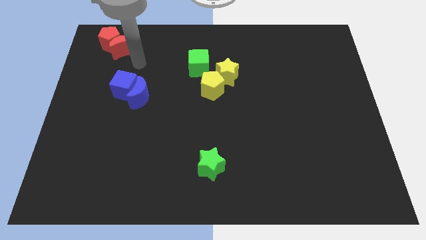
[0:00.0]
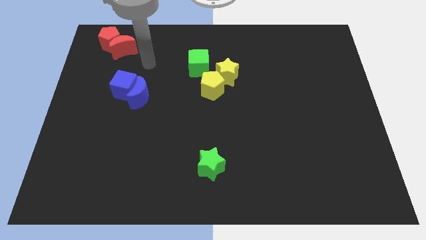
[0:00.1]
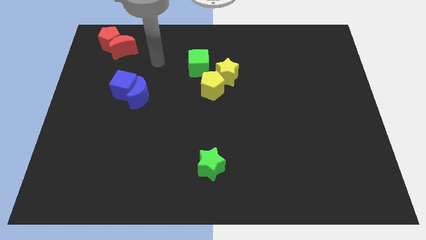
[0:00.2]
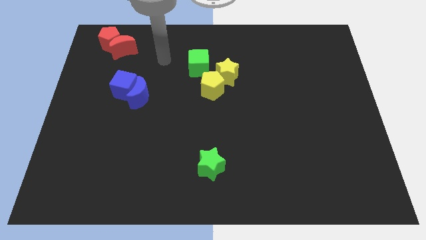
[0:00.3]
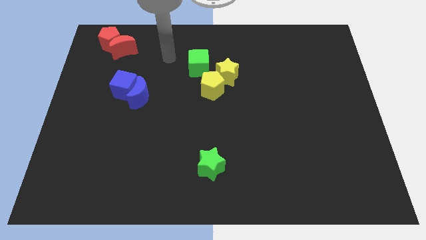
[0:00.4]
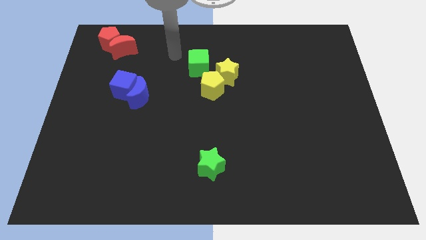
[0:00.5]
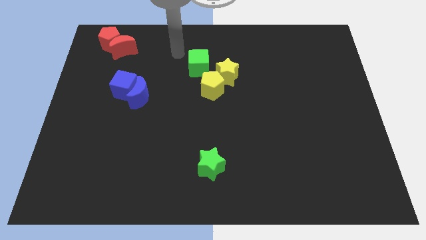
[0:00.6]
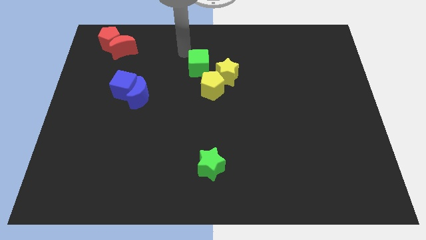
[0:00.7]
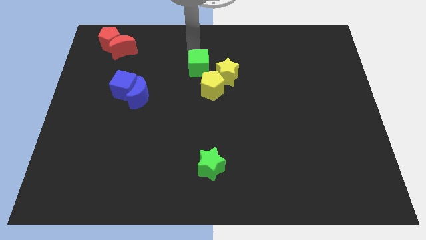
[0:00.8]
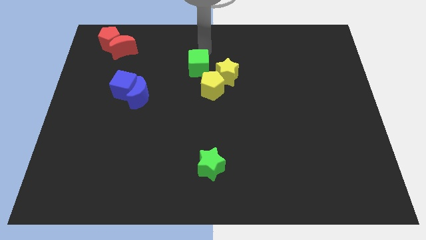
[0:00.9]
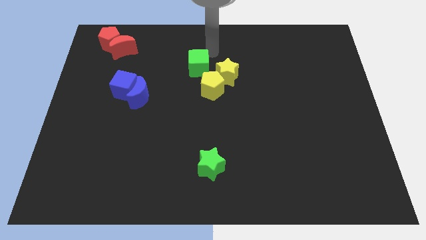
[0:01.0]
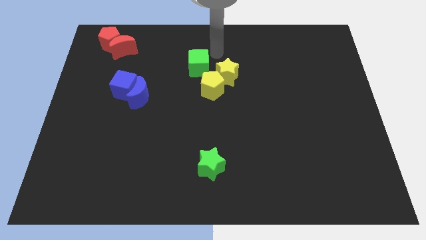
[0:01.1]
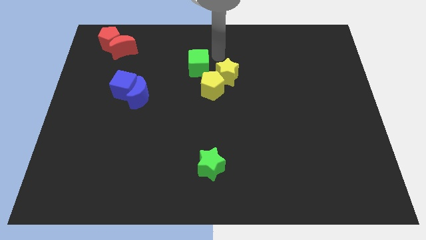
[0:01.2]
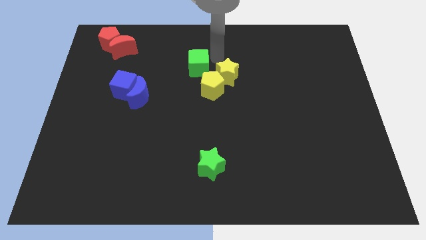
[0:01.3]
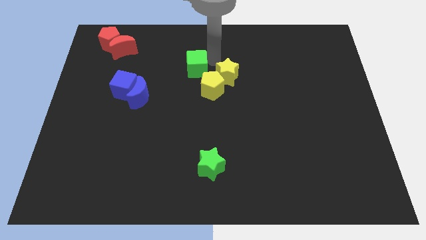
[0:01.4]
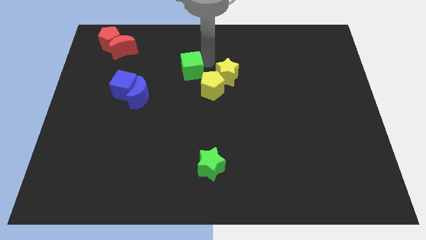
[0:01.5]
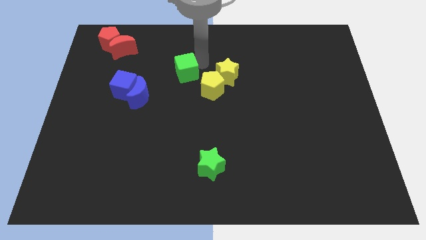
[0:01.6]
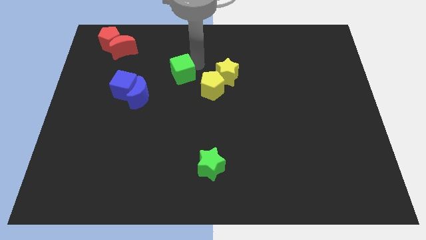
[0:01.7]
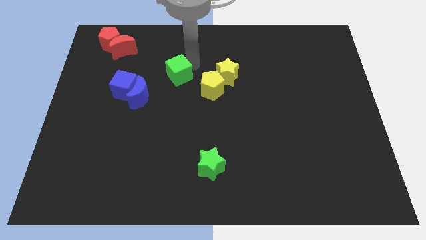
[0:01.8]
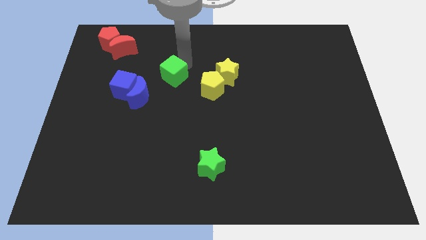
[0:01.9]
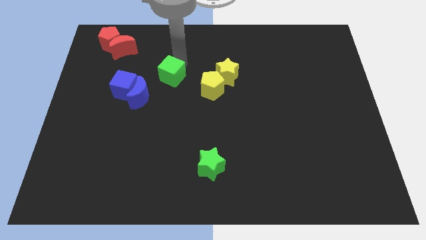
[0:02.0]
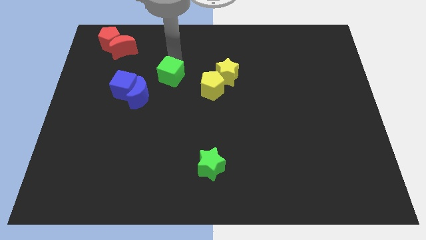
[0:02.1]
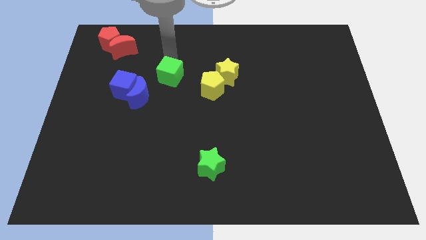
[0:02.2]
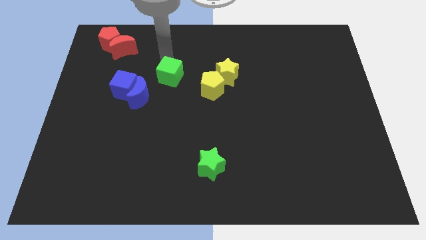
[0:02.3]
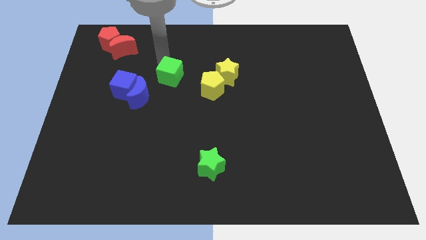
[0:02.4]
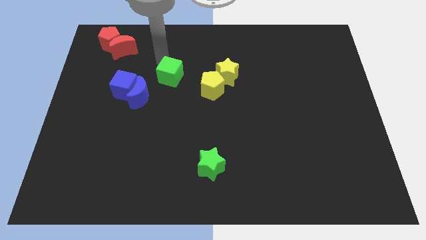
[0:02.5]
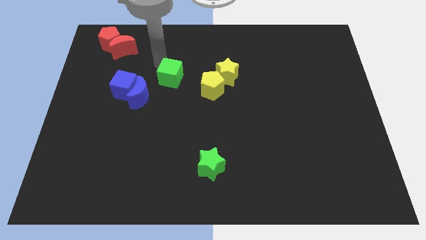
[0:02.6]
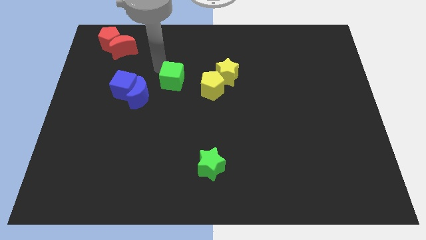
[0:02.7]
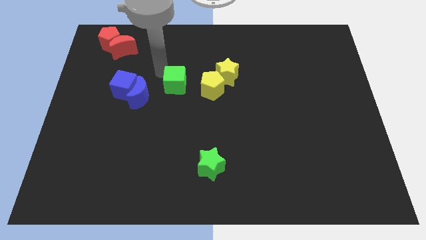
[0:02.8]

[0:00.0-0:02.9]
place the green cube left to the yellow pentagon

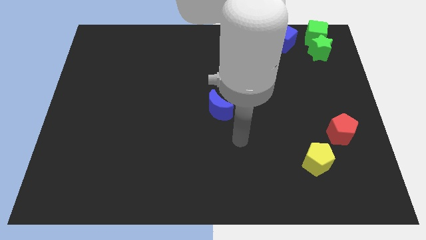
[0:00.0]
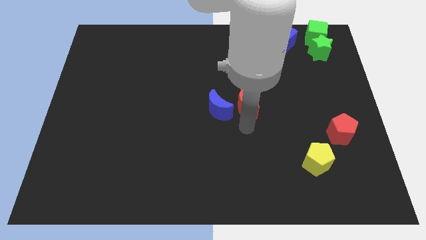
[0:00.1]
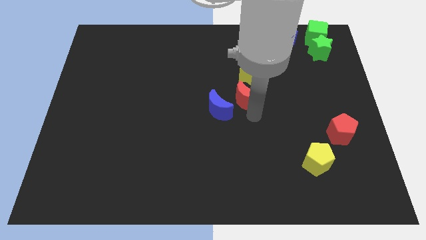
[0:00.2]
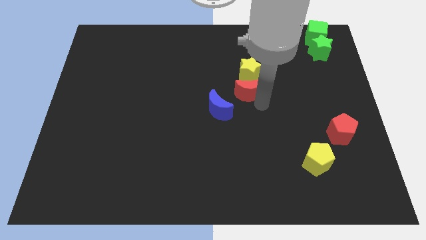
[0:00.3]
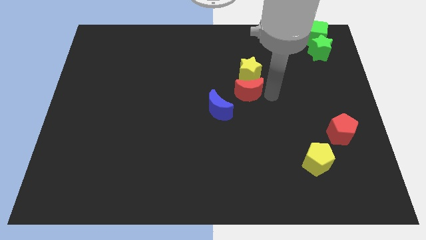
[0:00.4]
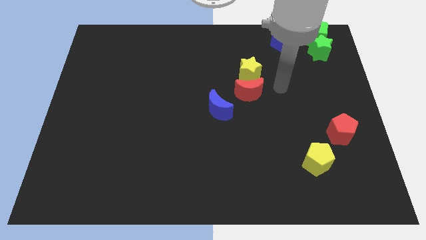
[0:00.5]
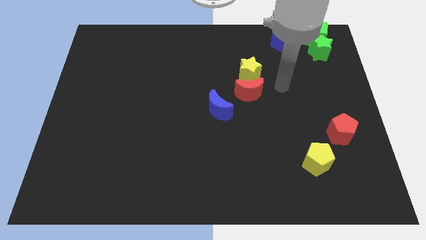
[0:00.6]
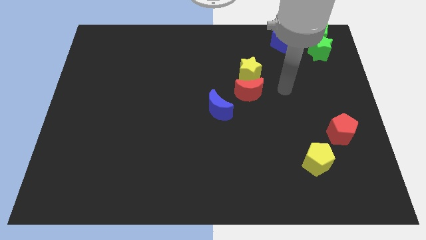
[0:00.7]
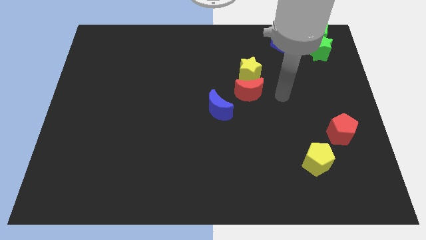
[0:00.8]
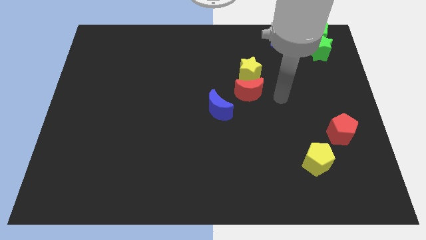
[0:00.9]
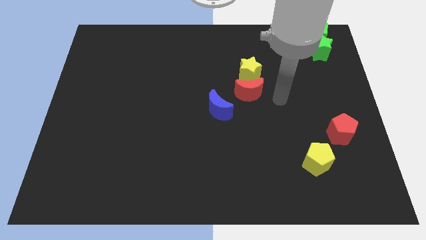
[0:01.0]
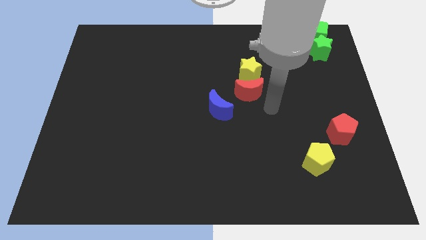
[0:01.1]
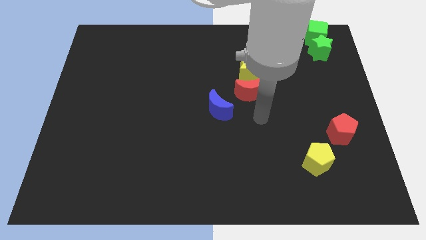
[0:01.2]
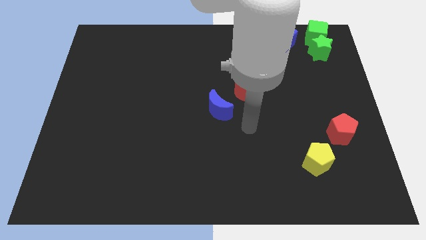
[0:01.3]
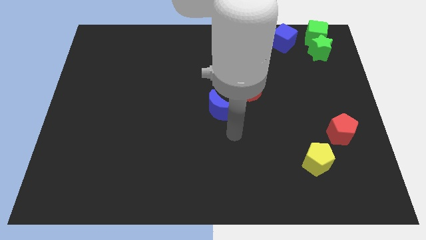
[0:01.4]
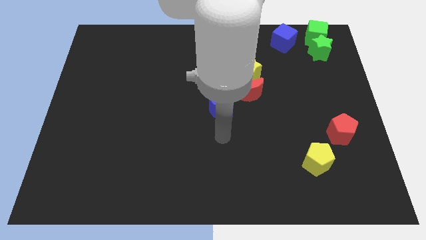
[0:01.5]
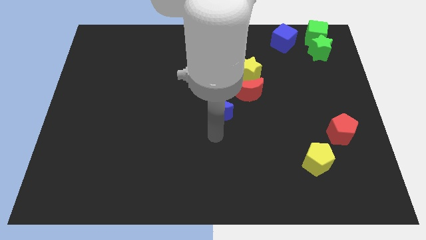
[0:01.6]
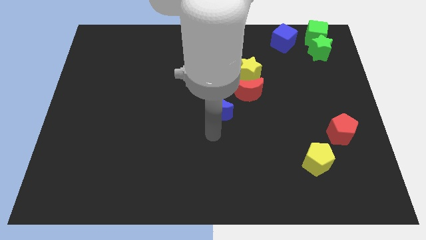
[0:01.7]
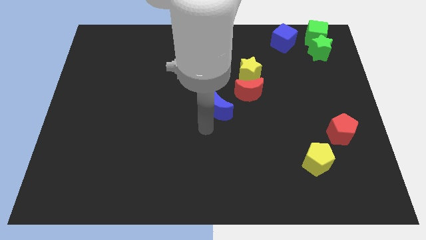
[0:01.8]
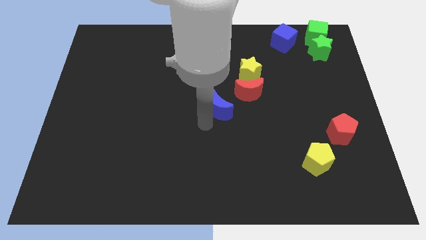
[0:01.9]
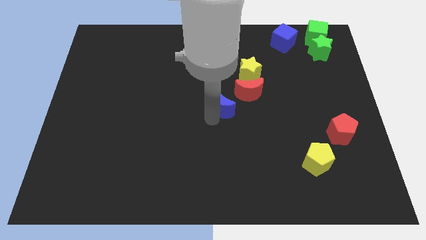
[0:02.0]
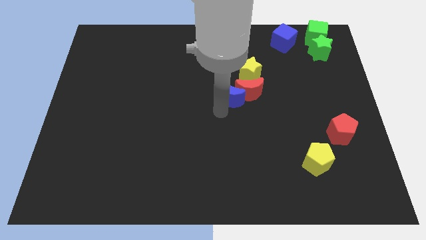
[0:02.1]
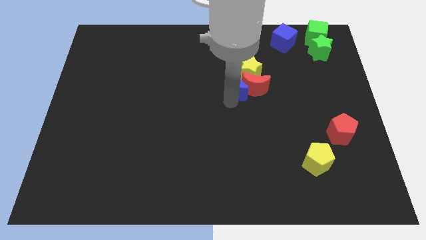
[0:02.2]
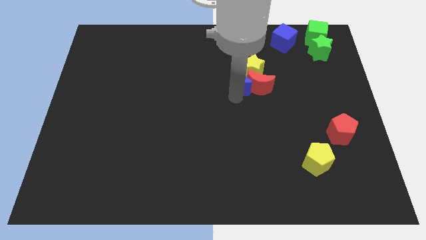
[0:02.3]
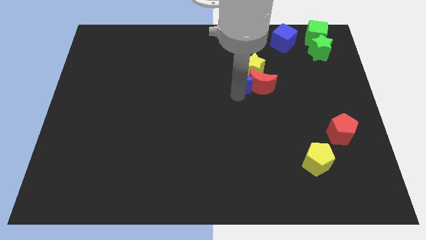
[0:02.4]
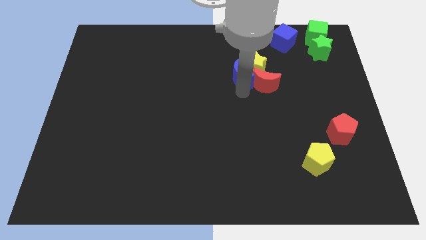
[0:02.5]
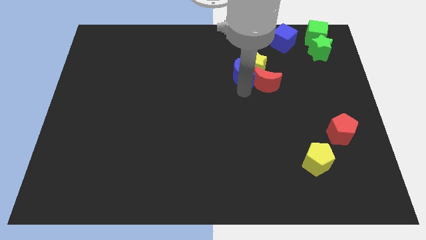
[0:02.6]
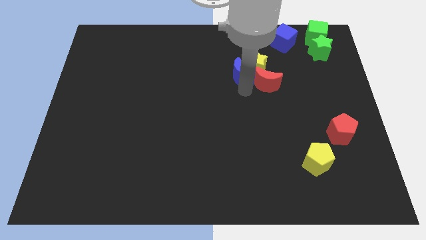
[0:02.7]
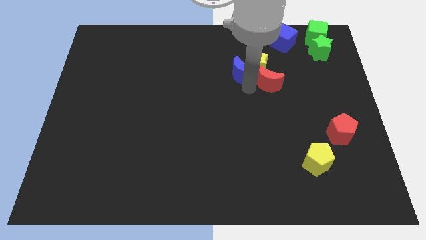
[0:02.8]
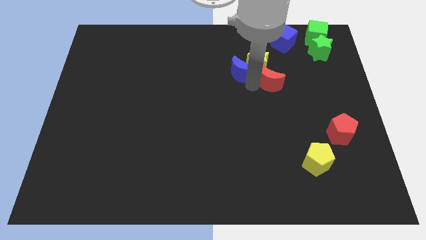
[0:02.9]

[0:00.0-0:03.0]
move the blue crescent into the yellow star and red moon

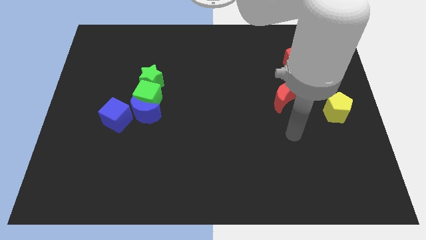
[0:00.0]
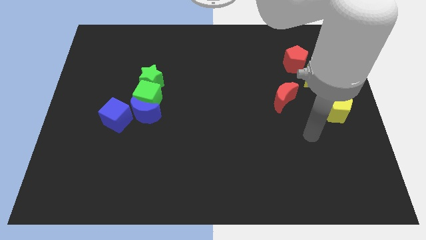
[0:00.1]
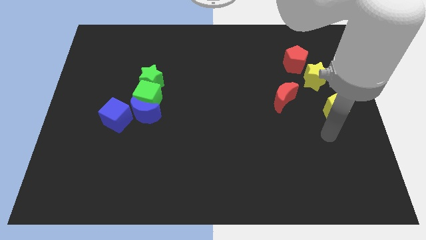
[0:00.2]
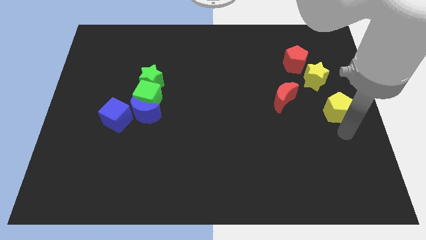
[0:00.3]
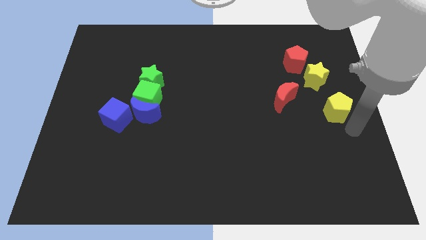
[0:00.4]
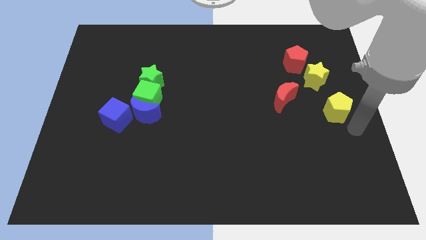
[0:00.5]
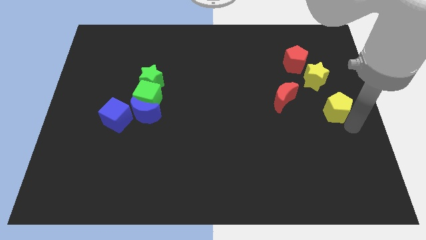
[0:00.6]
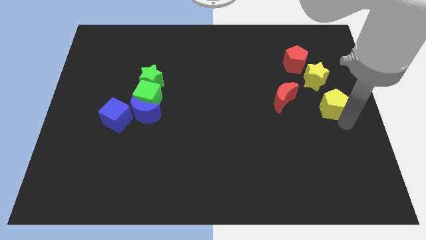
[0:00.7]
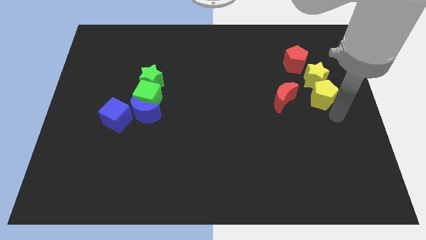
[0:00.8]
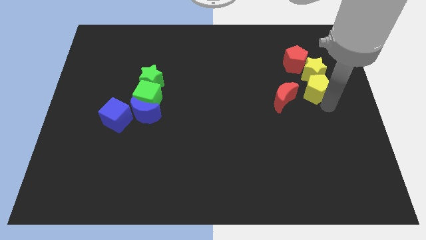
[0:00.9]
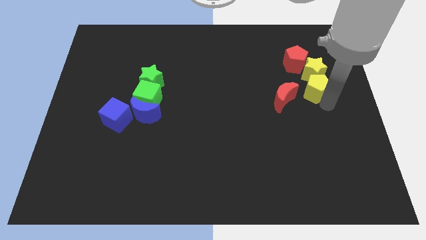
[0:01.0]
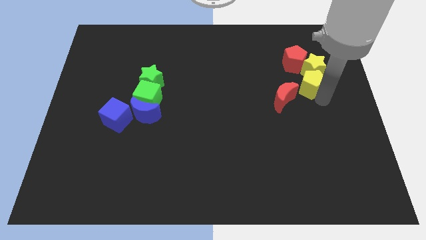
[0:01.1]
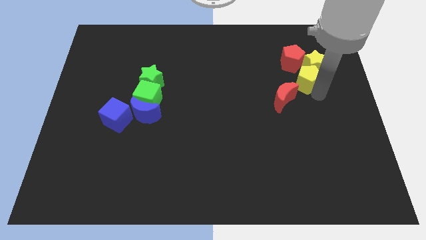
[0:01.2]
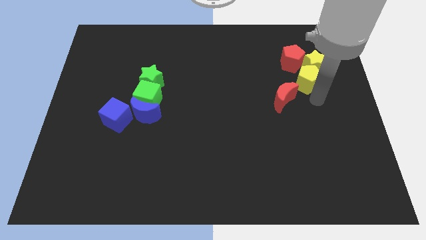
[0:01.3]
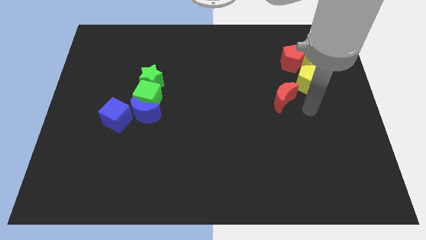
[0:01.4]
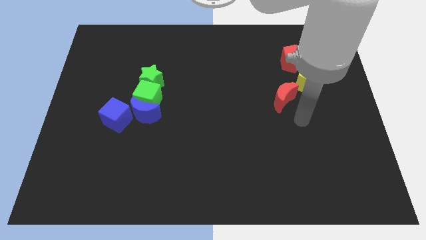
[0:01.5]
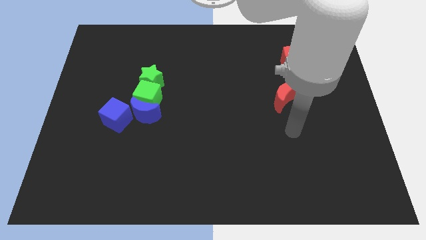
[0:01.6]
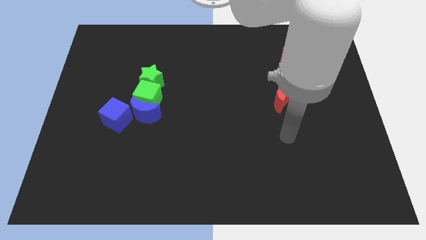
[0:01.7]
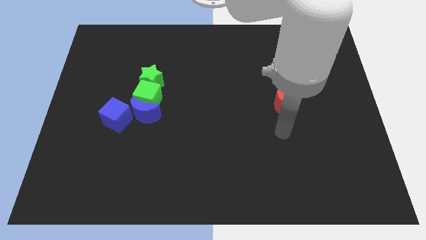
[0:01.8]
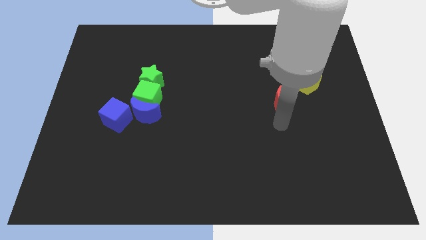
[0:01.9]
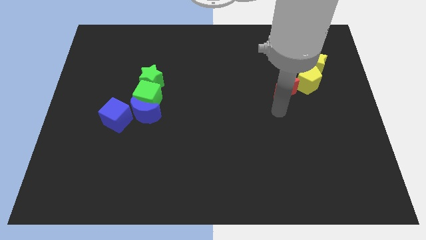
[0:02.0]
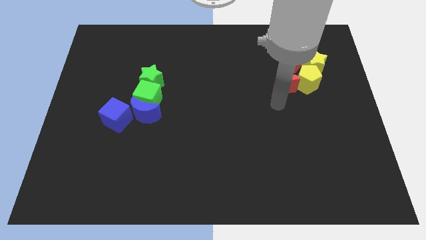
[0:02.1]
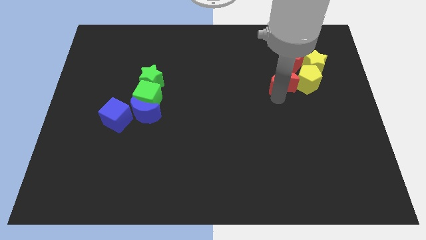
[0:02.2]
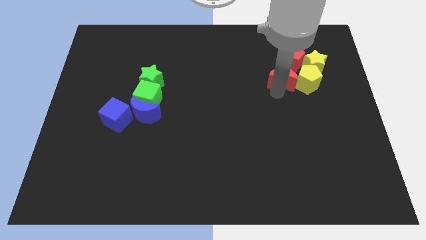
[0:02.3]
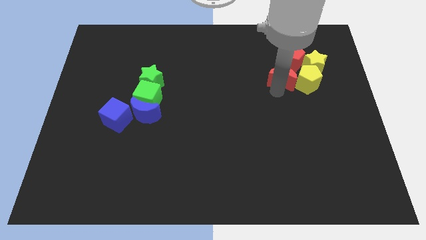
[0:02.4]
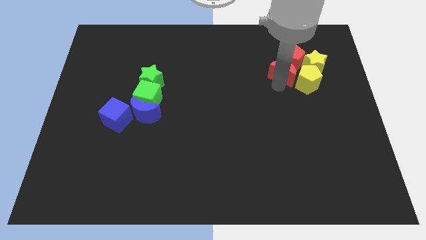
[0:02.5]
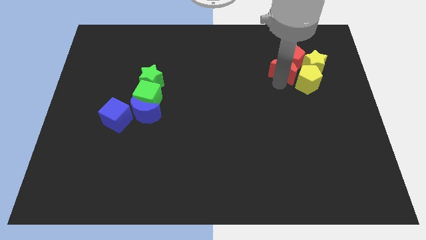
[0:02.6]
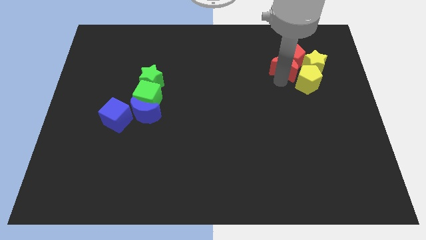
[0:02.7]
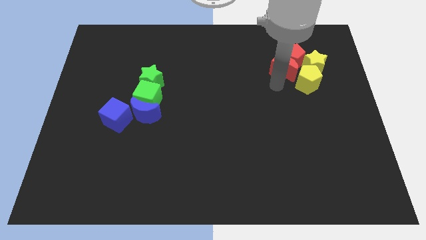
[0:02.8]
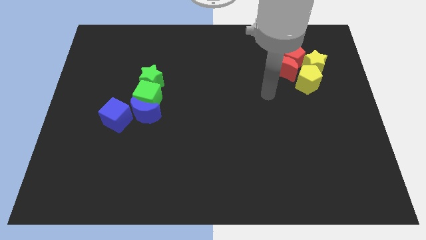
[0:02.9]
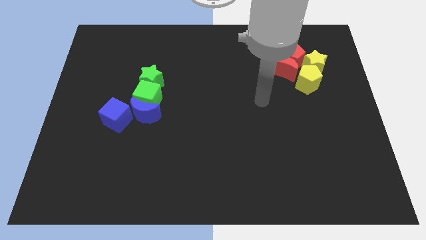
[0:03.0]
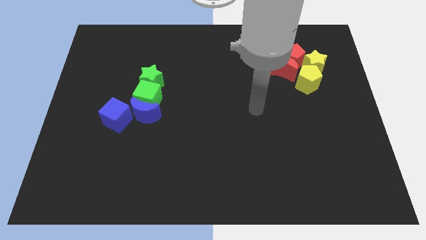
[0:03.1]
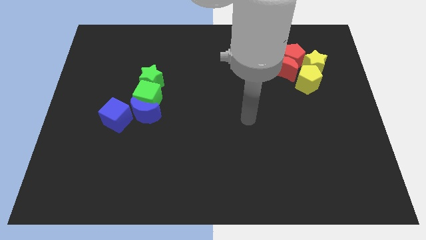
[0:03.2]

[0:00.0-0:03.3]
slide the red moon into the red pentagon
